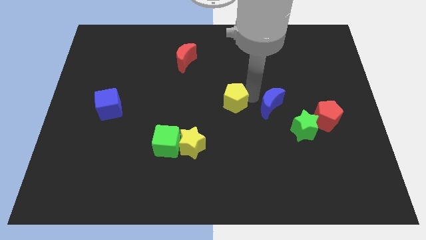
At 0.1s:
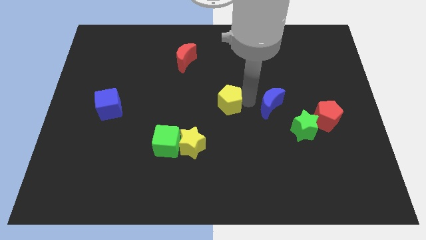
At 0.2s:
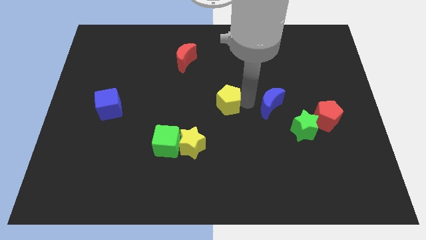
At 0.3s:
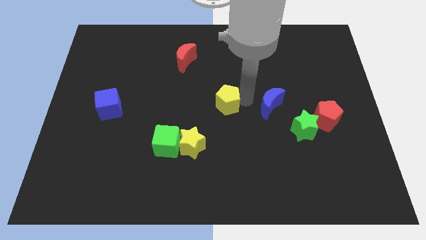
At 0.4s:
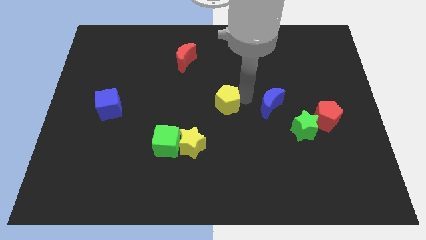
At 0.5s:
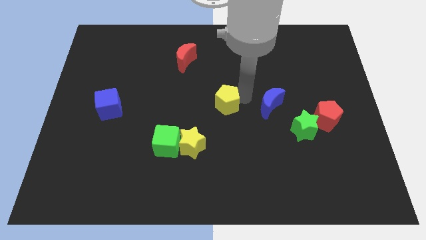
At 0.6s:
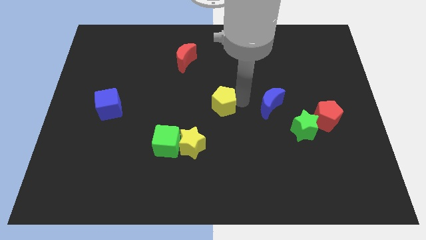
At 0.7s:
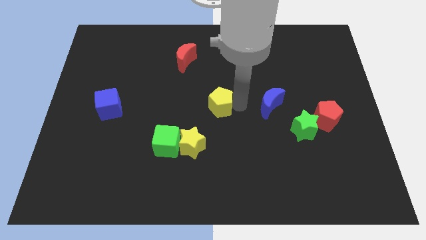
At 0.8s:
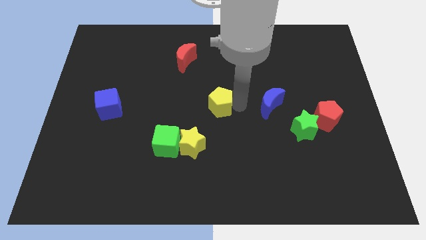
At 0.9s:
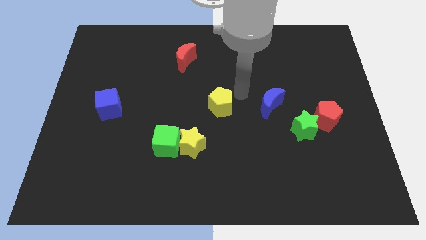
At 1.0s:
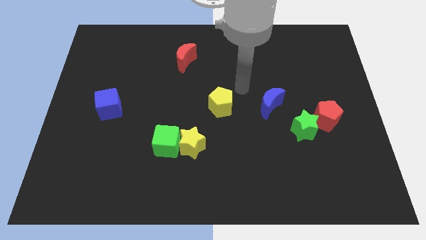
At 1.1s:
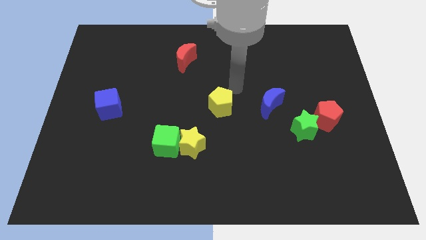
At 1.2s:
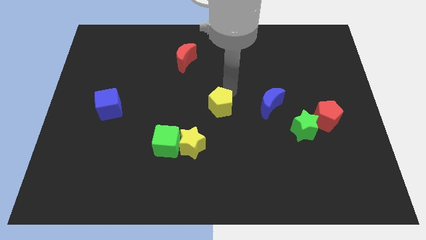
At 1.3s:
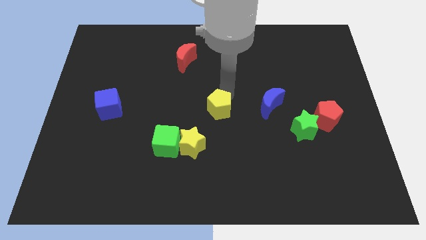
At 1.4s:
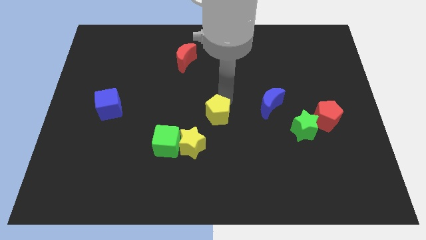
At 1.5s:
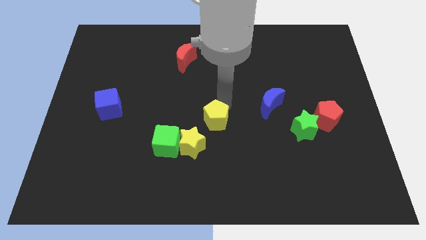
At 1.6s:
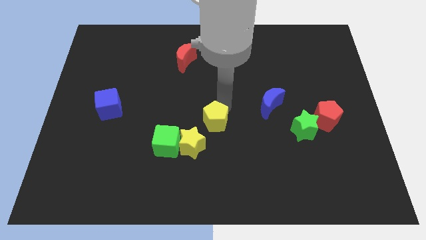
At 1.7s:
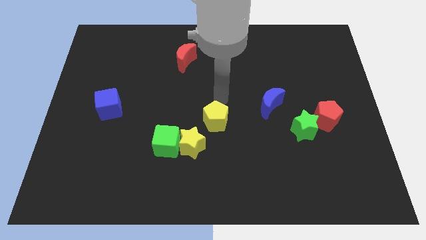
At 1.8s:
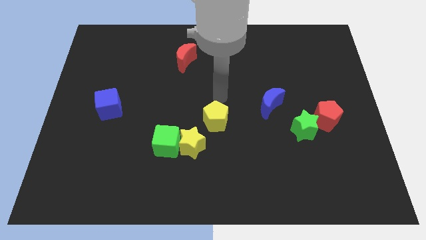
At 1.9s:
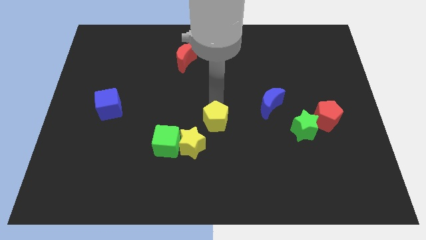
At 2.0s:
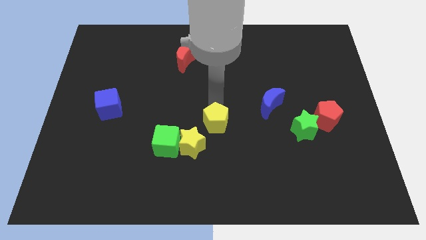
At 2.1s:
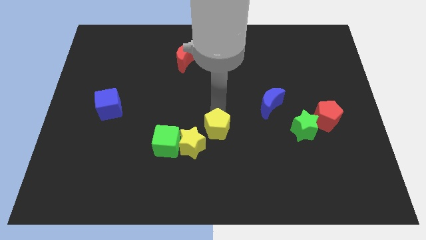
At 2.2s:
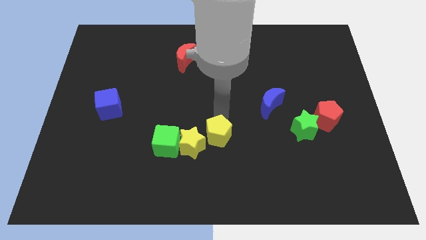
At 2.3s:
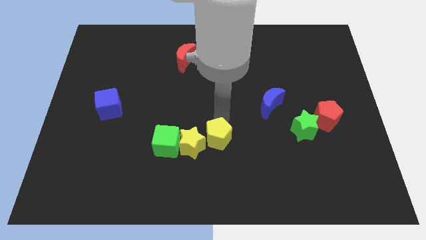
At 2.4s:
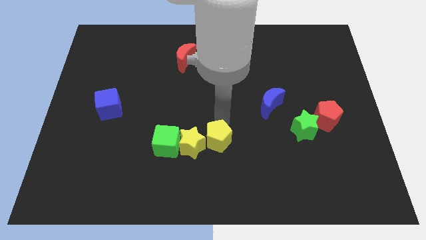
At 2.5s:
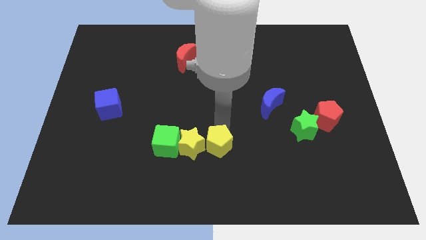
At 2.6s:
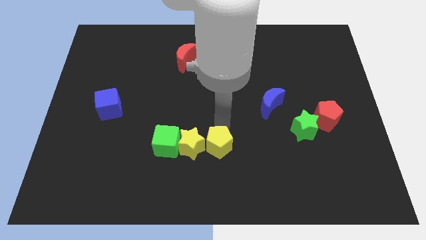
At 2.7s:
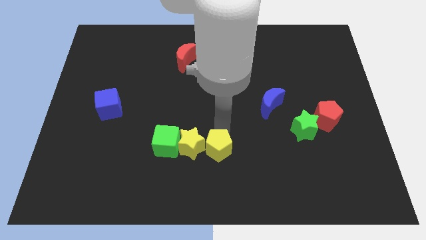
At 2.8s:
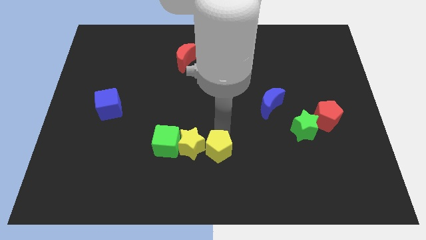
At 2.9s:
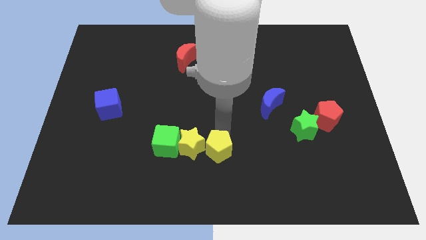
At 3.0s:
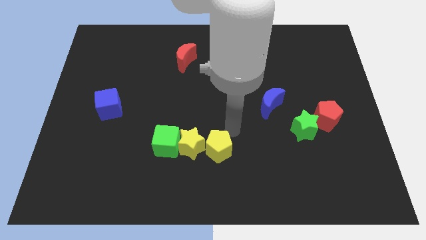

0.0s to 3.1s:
place yellow pentagon into yellow star

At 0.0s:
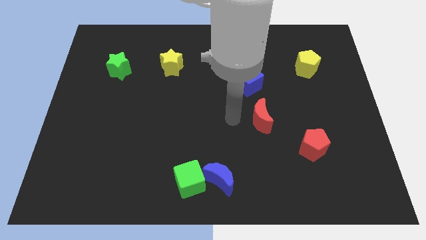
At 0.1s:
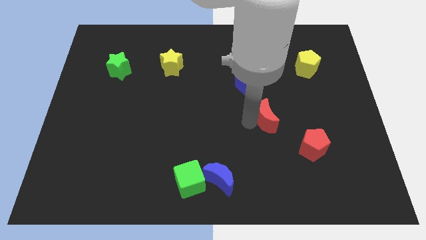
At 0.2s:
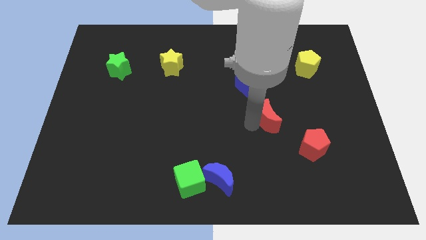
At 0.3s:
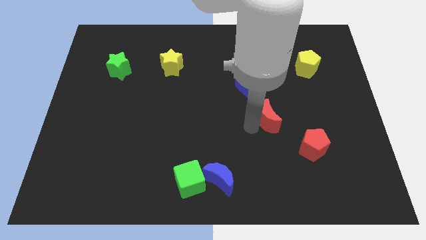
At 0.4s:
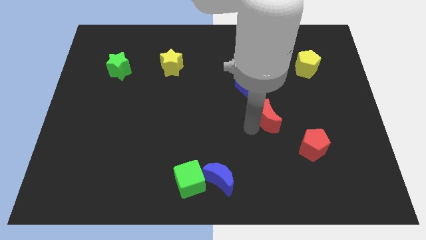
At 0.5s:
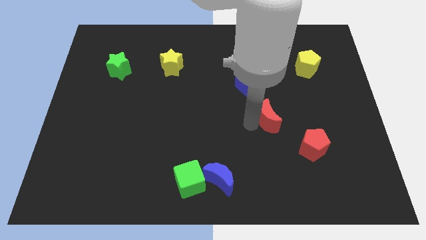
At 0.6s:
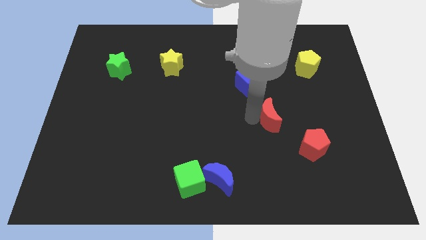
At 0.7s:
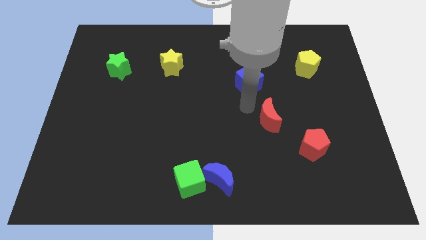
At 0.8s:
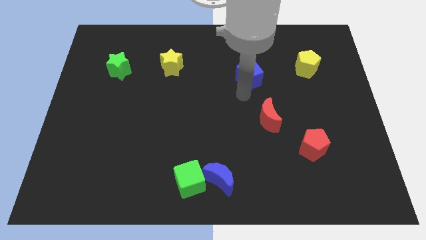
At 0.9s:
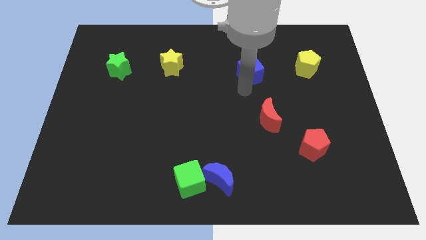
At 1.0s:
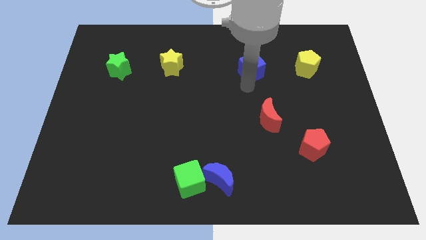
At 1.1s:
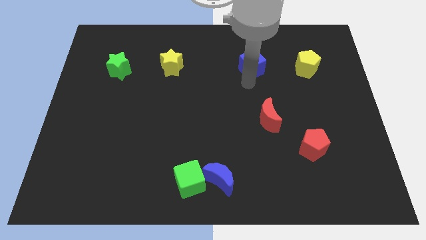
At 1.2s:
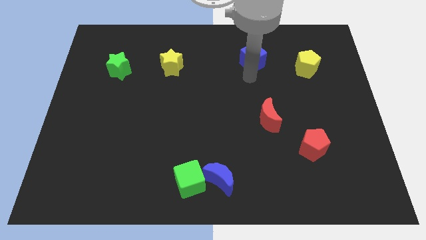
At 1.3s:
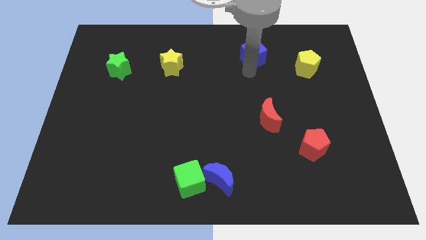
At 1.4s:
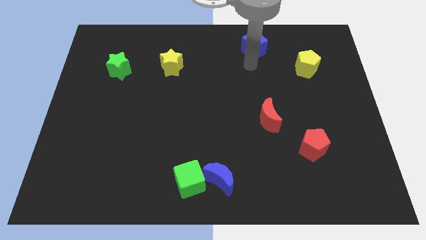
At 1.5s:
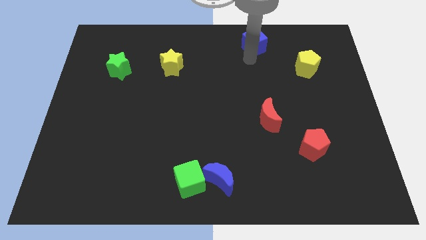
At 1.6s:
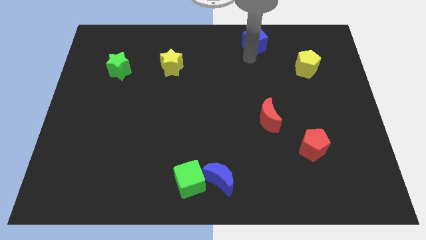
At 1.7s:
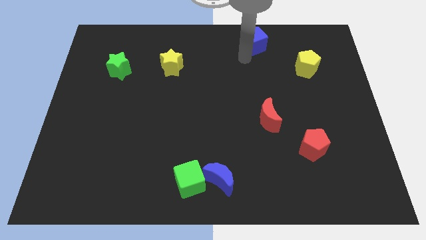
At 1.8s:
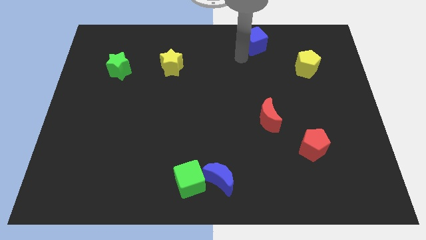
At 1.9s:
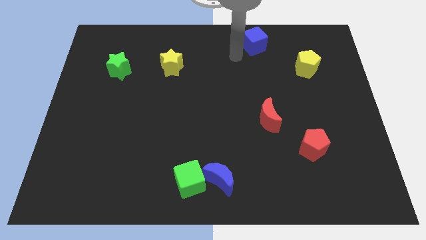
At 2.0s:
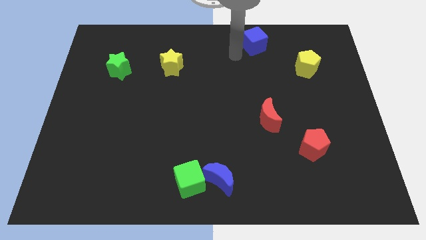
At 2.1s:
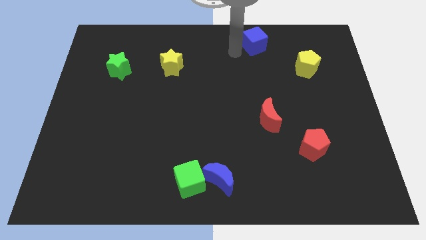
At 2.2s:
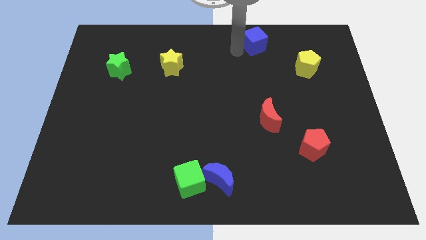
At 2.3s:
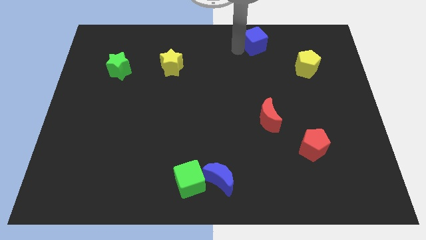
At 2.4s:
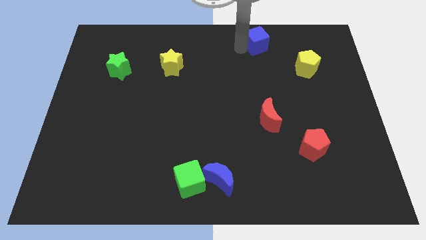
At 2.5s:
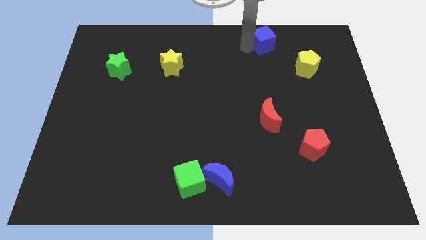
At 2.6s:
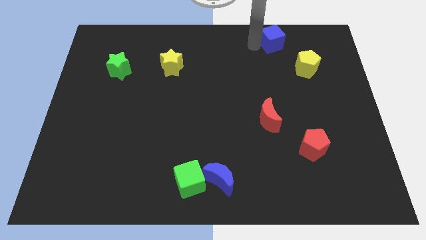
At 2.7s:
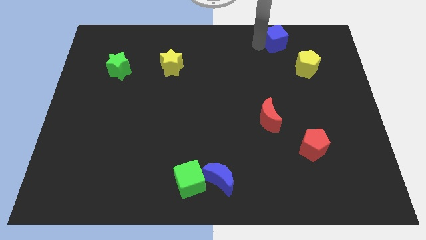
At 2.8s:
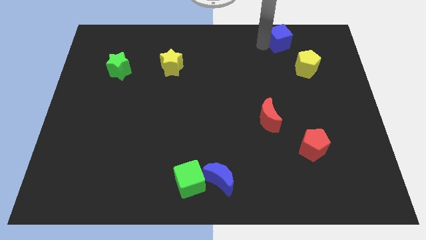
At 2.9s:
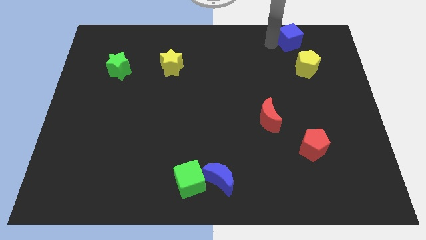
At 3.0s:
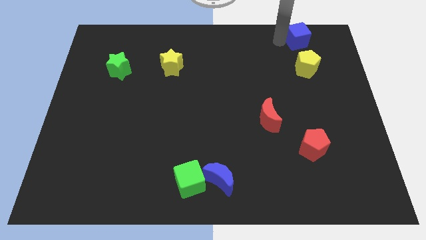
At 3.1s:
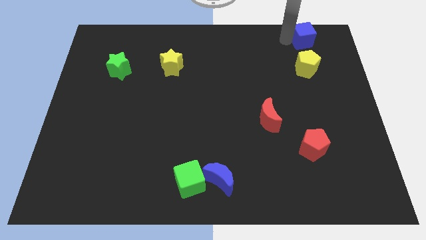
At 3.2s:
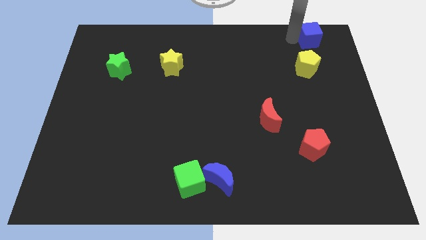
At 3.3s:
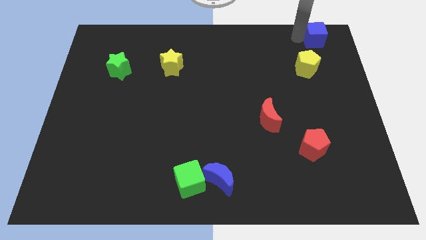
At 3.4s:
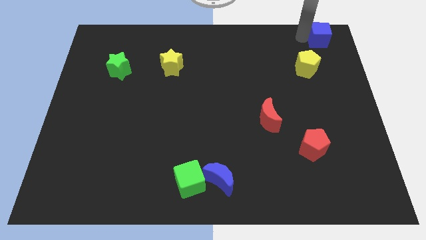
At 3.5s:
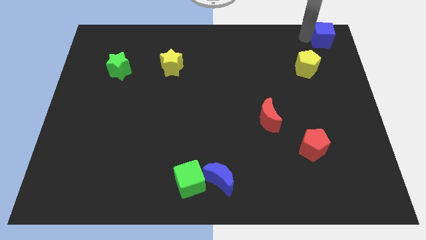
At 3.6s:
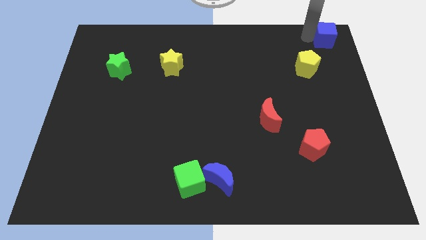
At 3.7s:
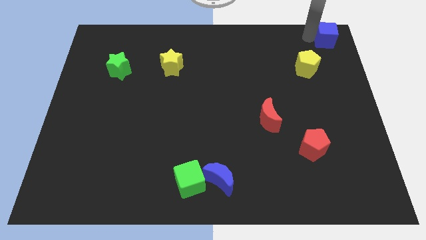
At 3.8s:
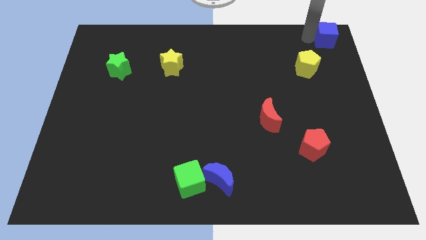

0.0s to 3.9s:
move the blue cube to the top right corner of the board

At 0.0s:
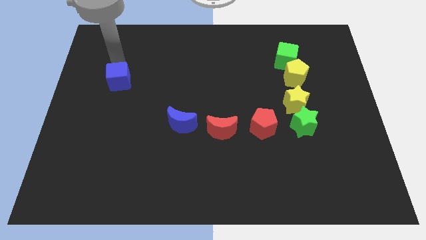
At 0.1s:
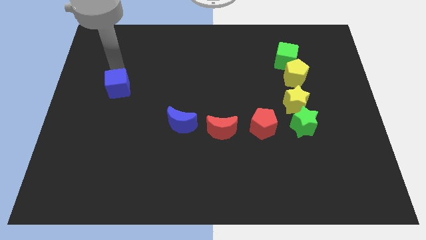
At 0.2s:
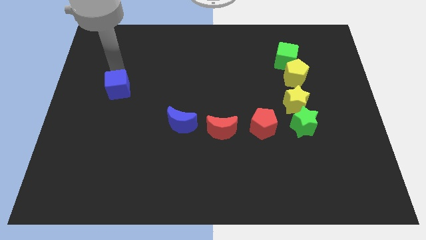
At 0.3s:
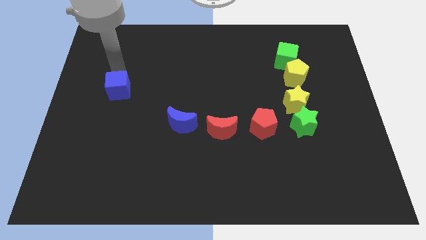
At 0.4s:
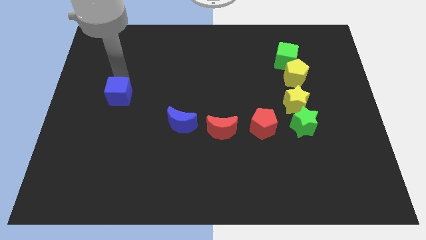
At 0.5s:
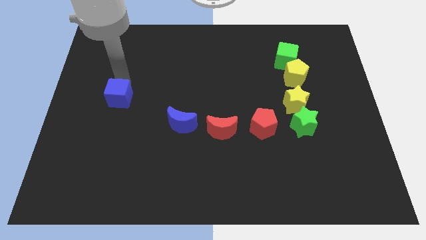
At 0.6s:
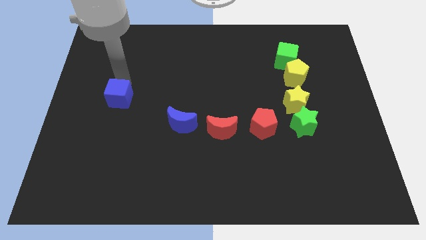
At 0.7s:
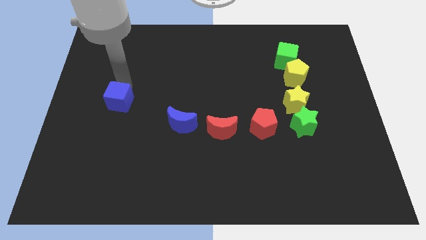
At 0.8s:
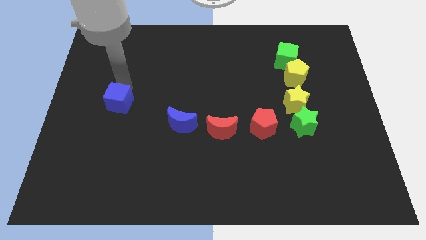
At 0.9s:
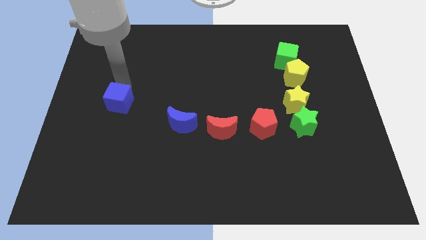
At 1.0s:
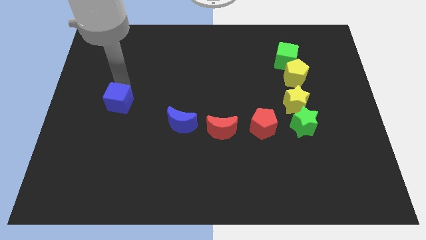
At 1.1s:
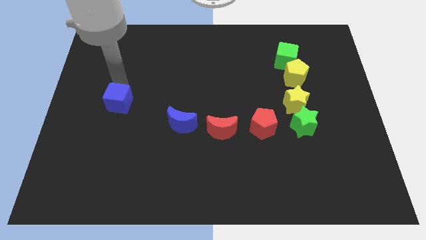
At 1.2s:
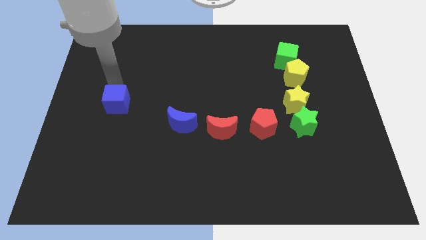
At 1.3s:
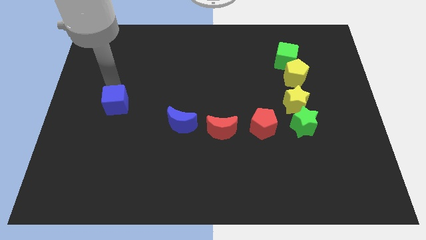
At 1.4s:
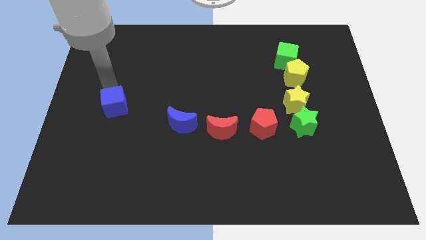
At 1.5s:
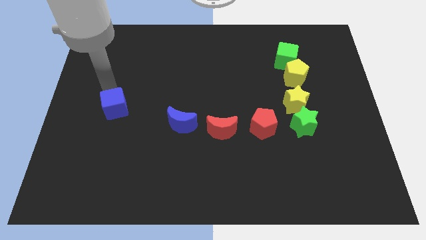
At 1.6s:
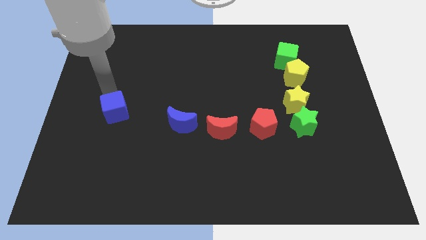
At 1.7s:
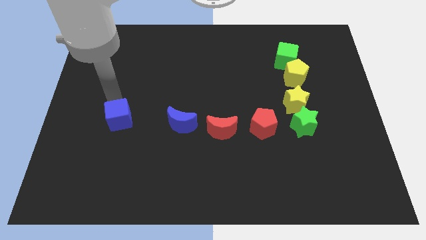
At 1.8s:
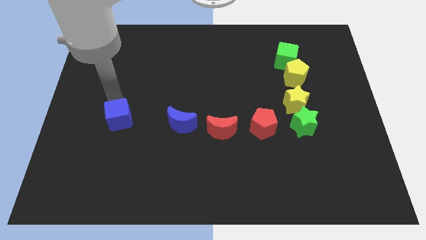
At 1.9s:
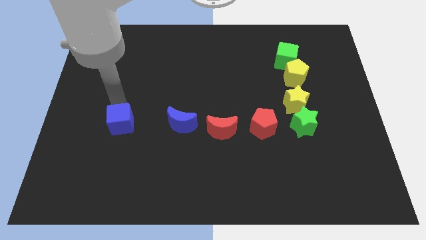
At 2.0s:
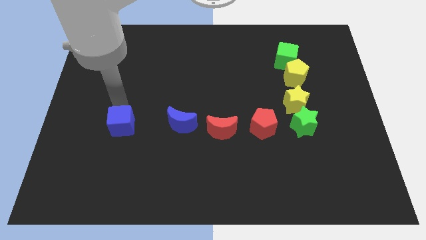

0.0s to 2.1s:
place the blue cube to the left of the blue crescent
